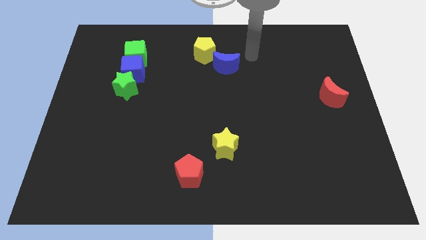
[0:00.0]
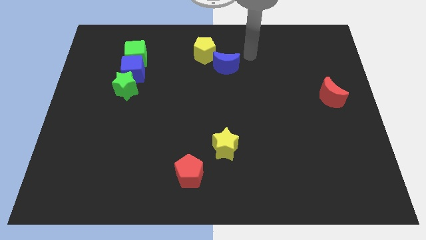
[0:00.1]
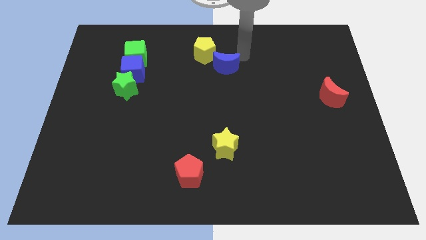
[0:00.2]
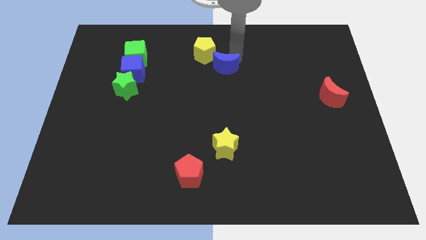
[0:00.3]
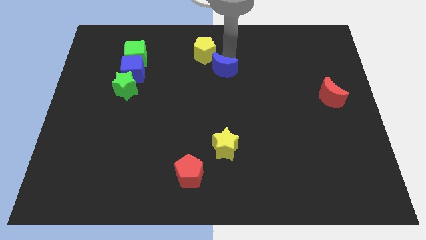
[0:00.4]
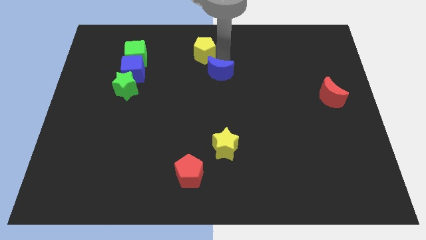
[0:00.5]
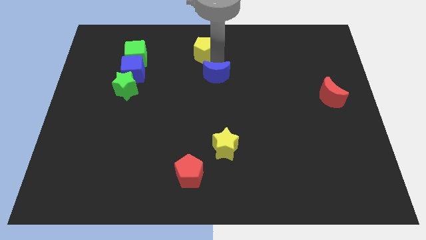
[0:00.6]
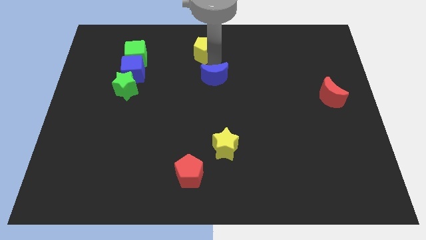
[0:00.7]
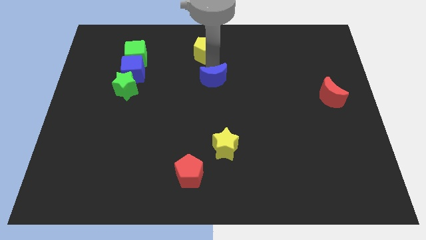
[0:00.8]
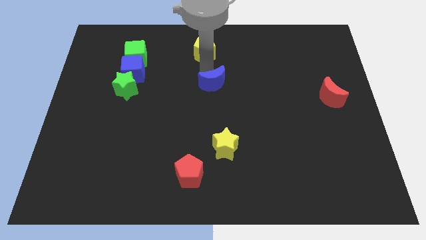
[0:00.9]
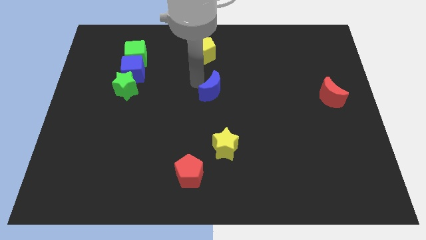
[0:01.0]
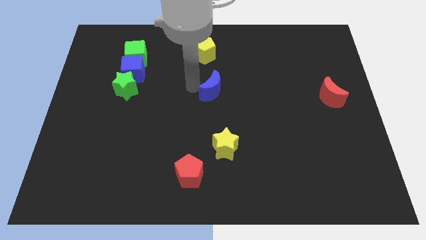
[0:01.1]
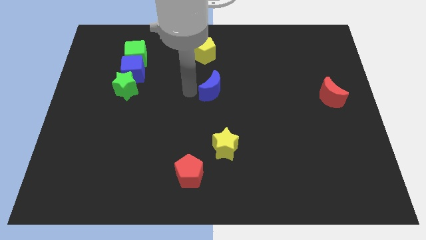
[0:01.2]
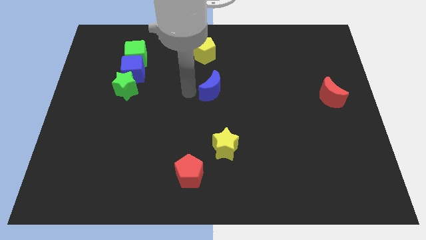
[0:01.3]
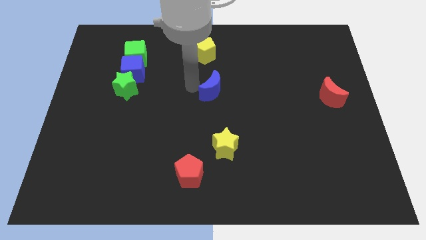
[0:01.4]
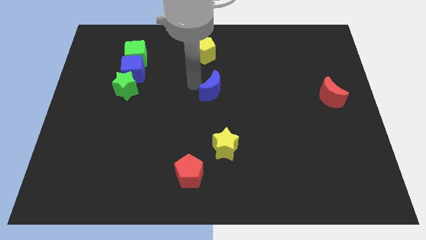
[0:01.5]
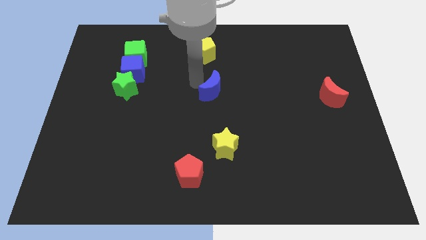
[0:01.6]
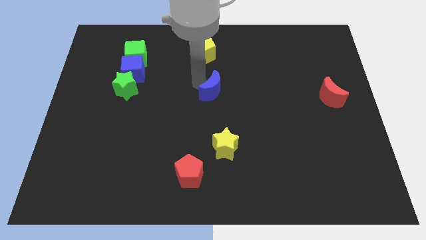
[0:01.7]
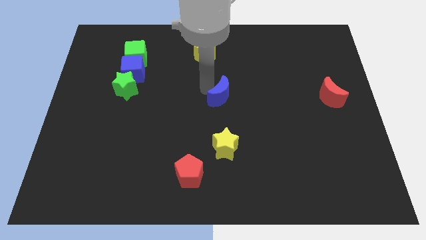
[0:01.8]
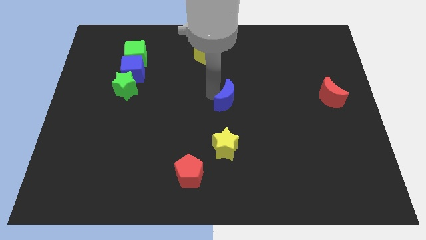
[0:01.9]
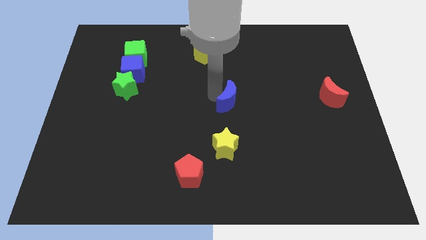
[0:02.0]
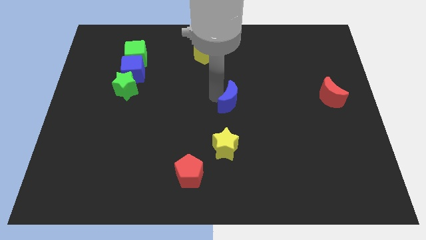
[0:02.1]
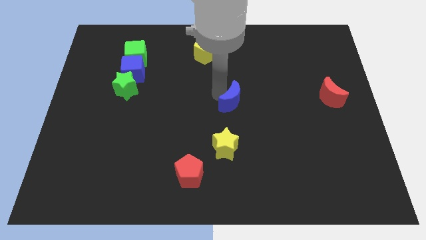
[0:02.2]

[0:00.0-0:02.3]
move the blue moon to the center of the board

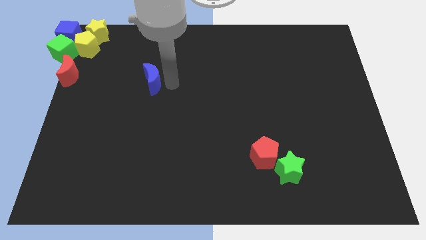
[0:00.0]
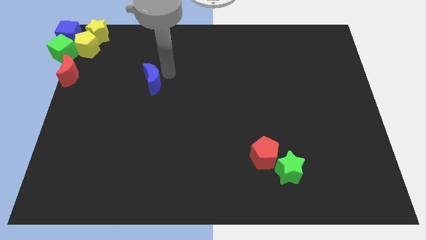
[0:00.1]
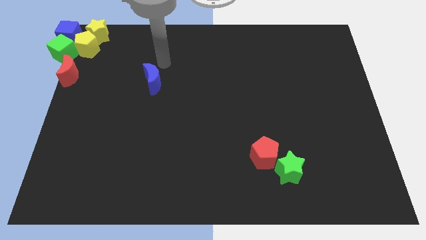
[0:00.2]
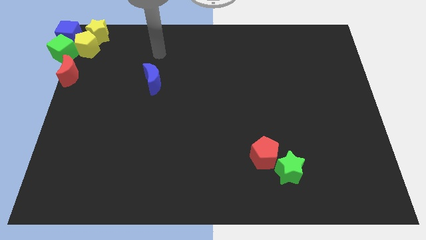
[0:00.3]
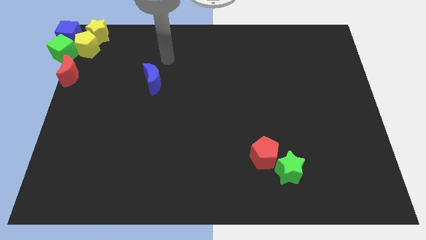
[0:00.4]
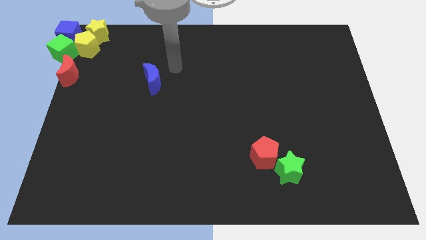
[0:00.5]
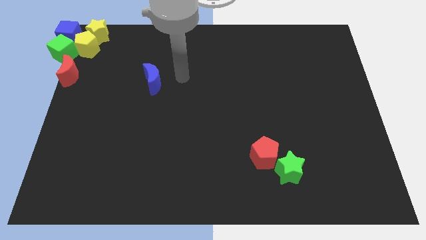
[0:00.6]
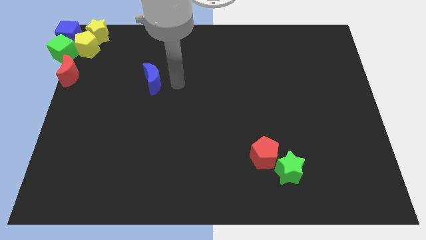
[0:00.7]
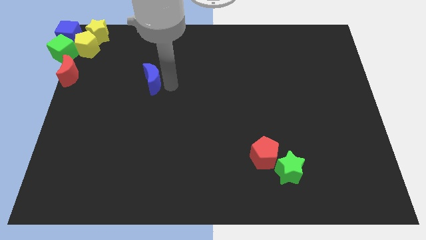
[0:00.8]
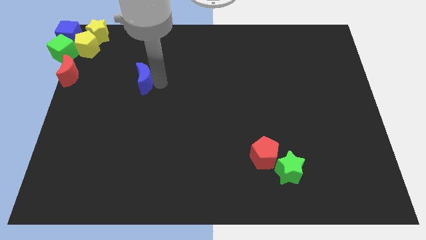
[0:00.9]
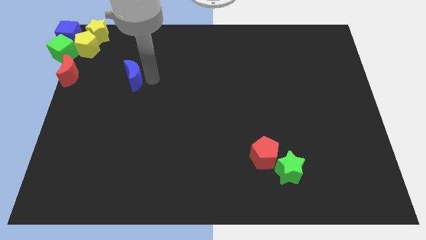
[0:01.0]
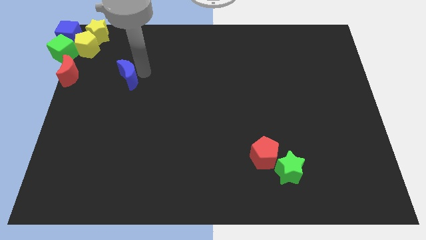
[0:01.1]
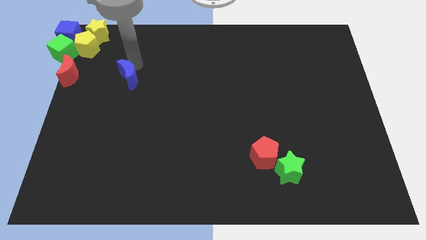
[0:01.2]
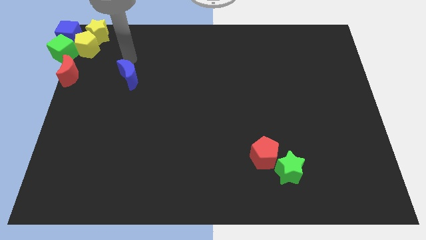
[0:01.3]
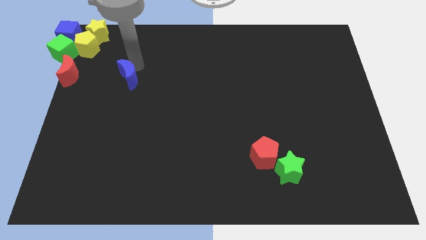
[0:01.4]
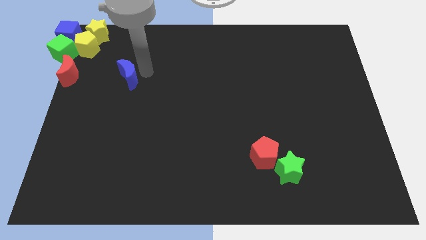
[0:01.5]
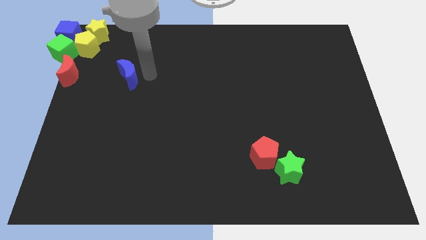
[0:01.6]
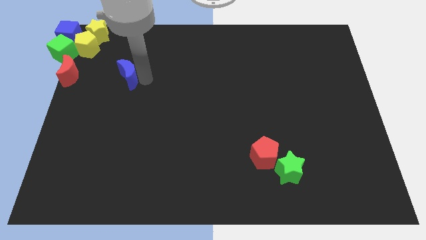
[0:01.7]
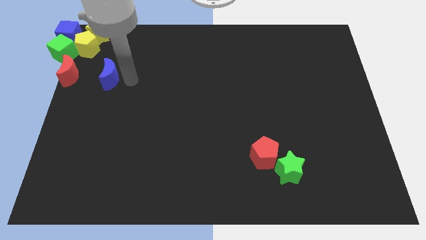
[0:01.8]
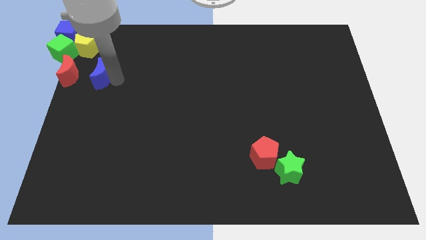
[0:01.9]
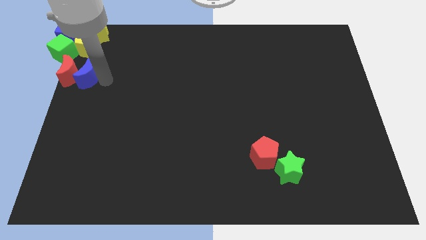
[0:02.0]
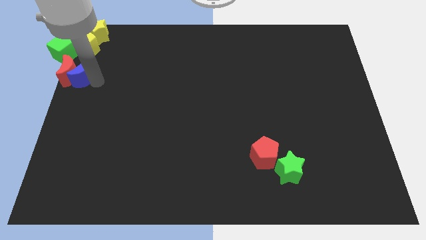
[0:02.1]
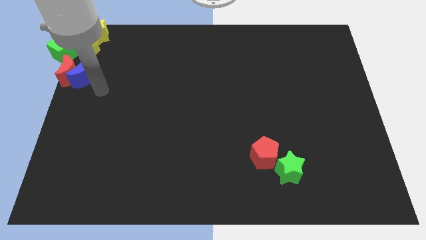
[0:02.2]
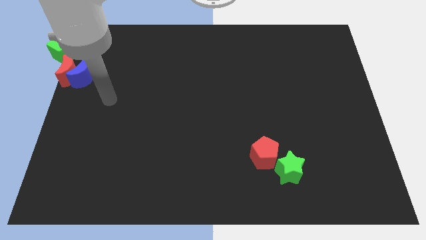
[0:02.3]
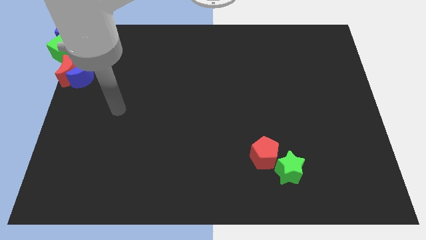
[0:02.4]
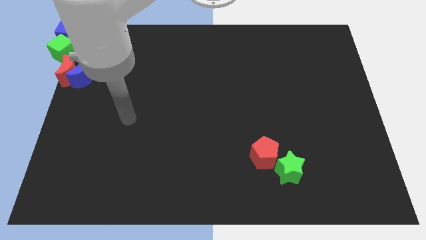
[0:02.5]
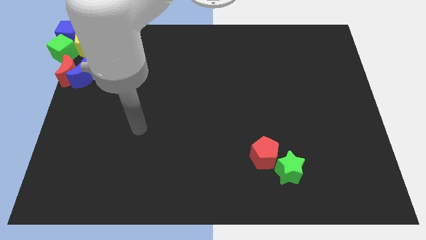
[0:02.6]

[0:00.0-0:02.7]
place the blue moon to the right side of red moon

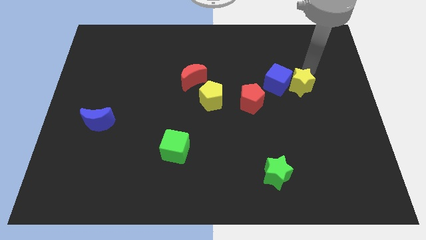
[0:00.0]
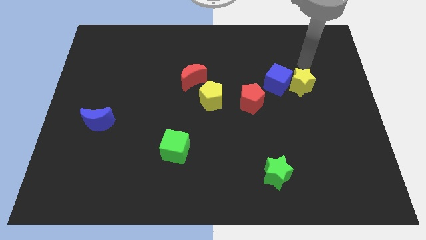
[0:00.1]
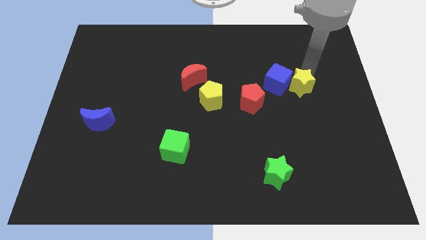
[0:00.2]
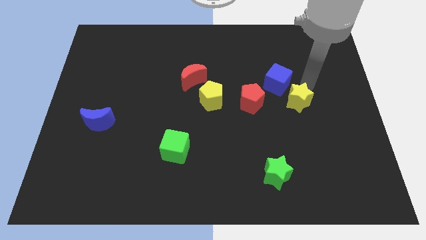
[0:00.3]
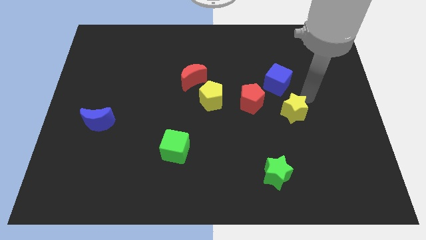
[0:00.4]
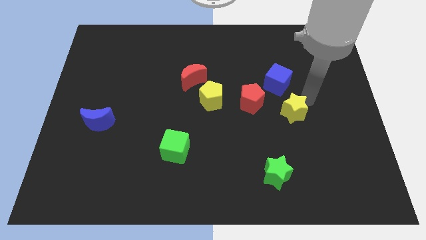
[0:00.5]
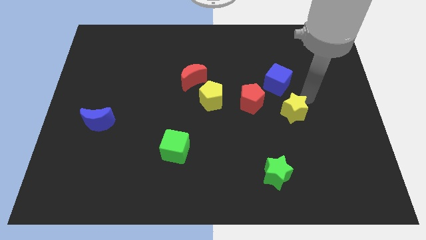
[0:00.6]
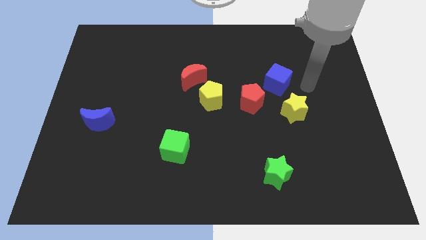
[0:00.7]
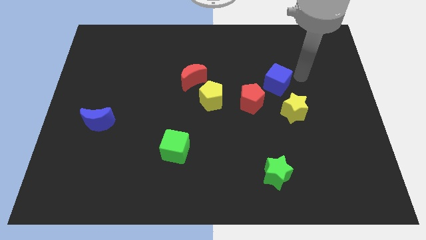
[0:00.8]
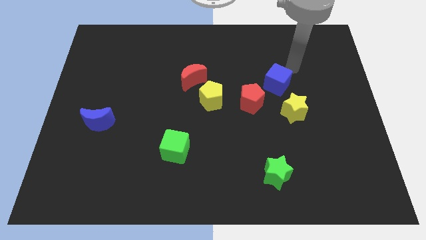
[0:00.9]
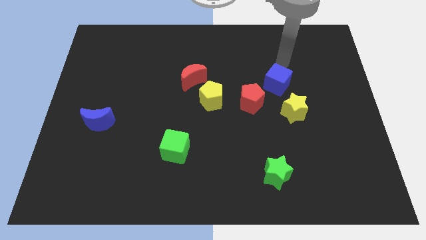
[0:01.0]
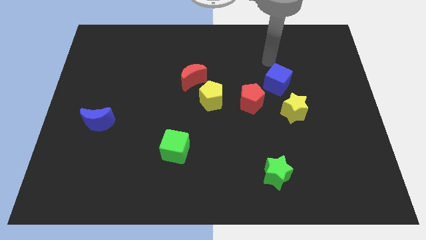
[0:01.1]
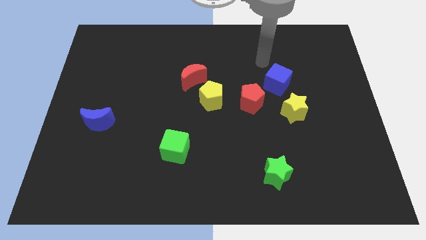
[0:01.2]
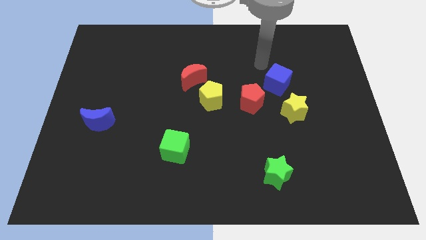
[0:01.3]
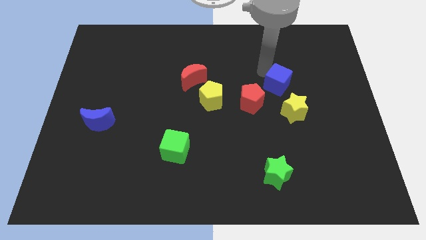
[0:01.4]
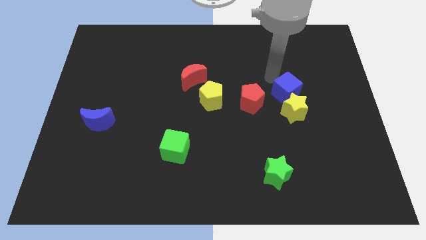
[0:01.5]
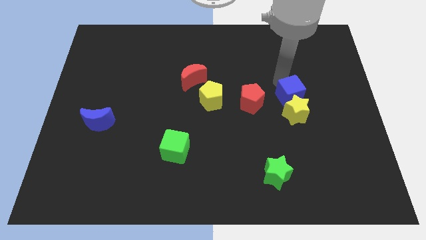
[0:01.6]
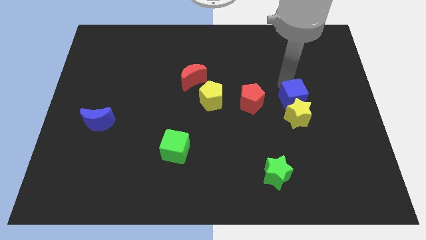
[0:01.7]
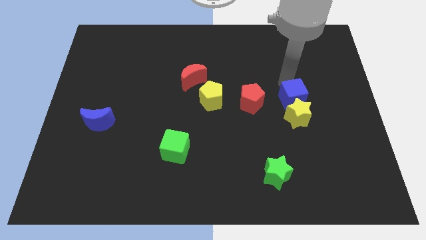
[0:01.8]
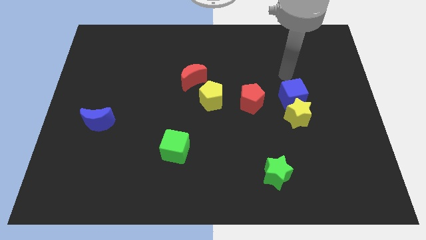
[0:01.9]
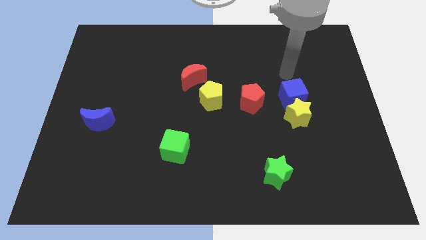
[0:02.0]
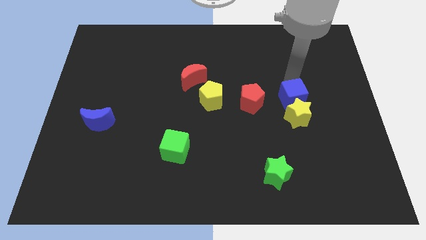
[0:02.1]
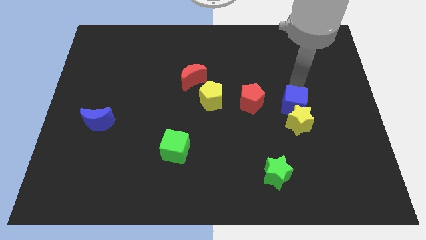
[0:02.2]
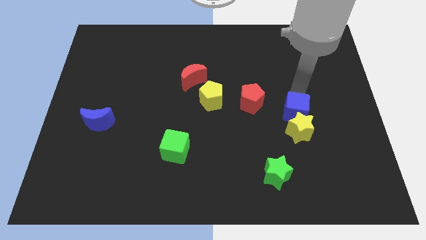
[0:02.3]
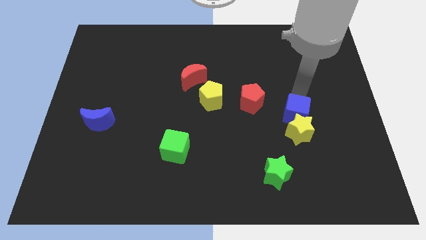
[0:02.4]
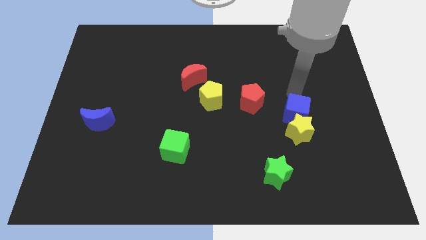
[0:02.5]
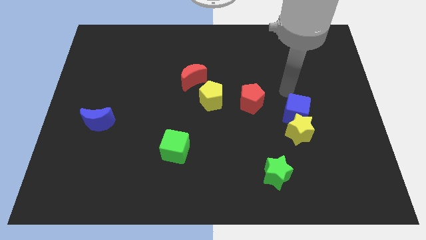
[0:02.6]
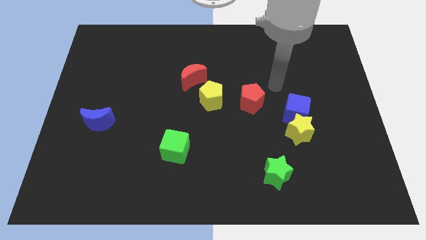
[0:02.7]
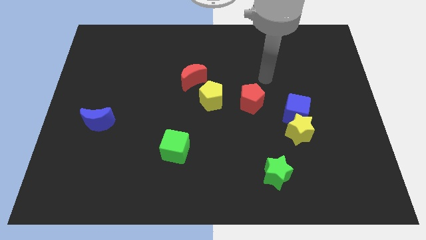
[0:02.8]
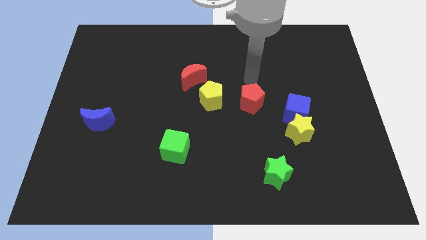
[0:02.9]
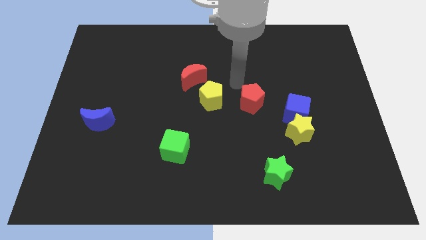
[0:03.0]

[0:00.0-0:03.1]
push the blue cube and yellow star to bottom center

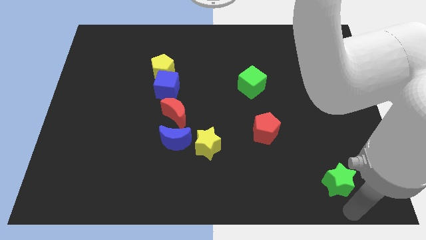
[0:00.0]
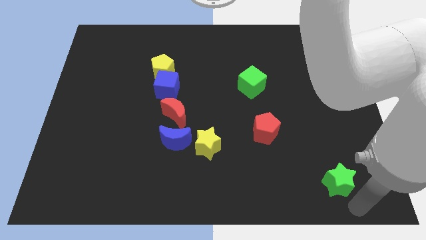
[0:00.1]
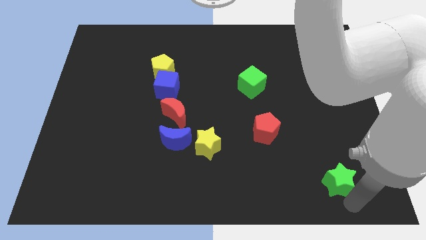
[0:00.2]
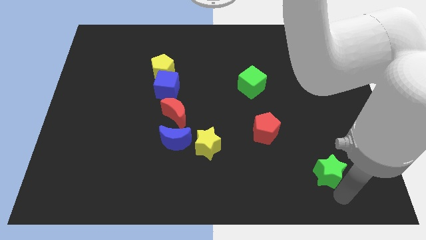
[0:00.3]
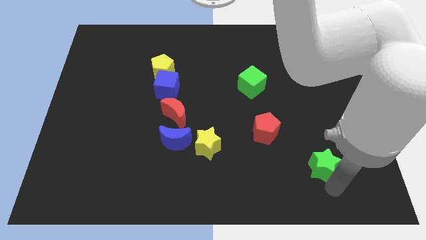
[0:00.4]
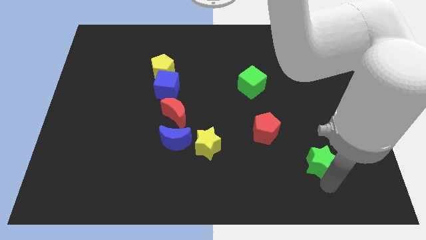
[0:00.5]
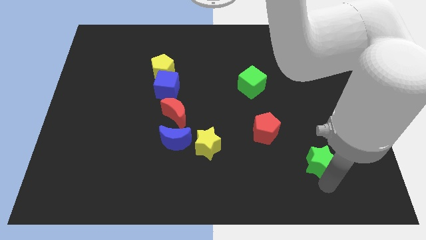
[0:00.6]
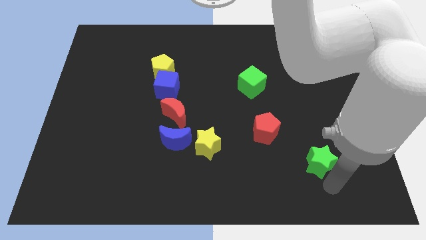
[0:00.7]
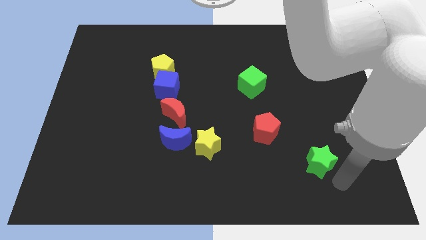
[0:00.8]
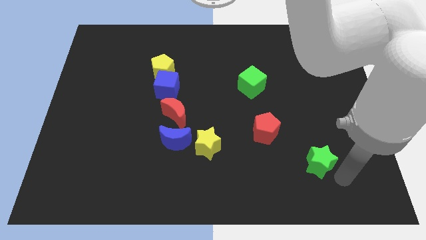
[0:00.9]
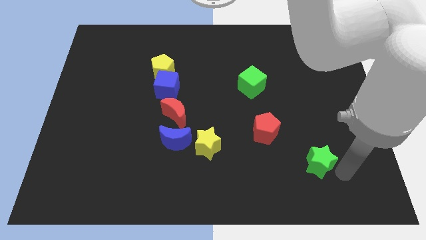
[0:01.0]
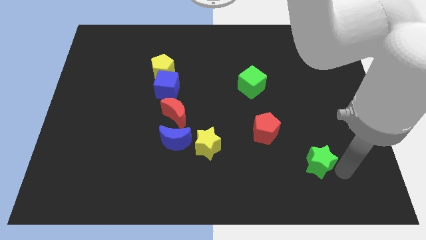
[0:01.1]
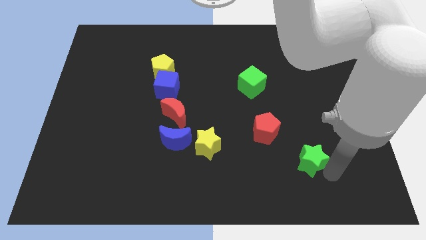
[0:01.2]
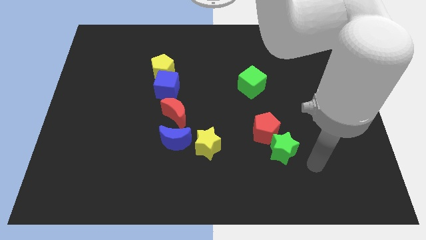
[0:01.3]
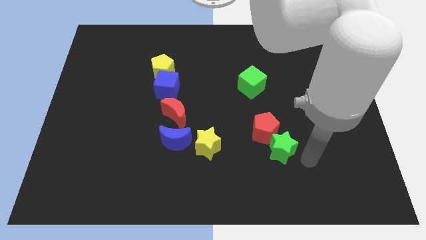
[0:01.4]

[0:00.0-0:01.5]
make the green star touch the bottom right of the red pentagon
